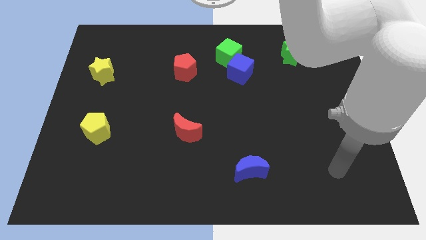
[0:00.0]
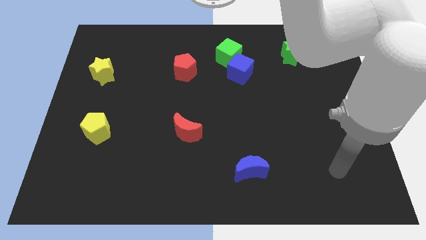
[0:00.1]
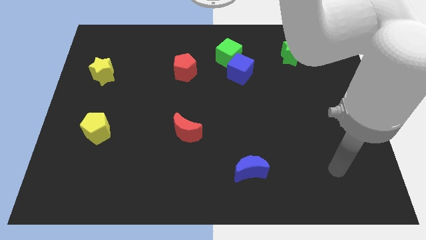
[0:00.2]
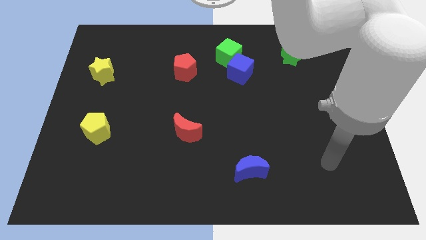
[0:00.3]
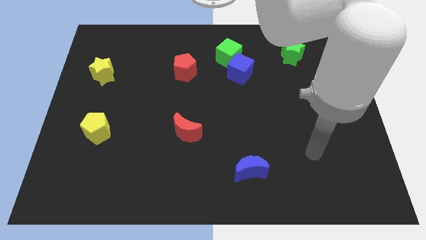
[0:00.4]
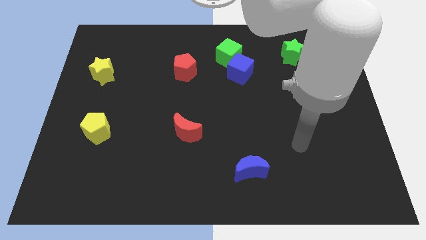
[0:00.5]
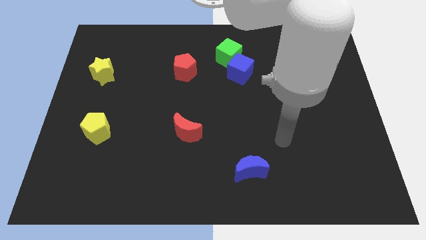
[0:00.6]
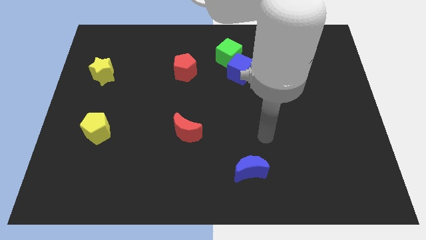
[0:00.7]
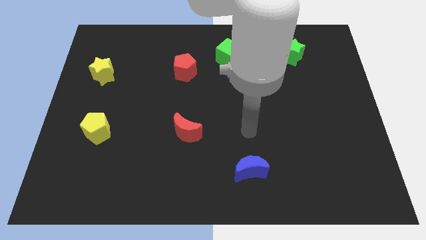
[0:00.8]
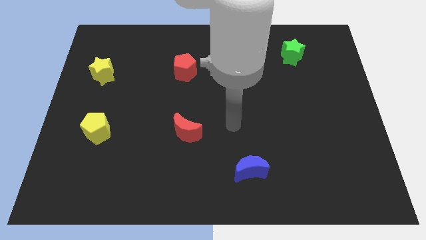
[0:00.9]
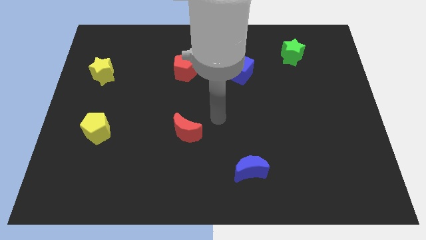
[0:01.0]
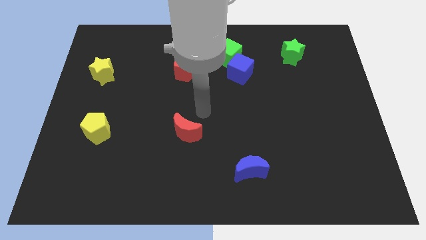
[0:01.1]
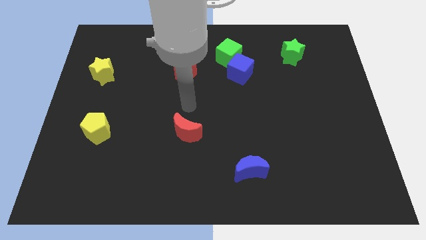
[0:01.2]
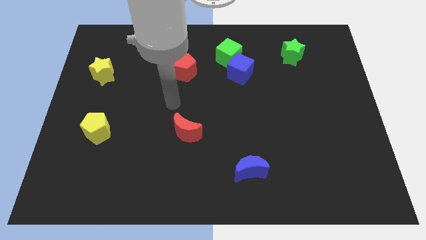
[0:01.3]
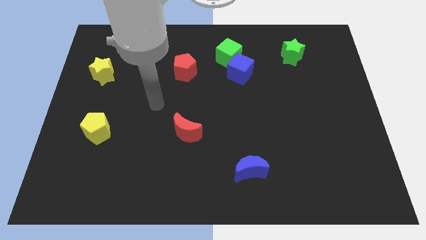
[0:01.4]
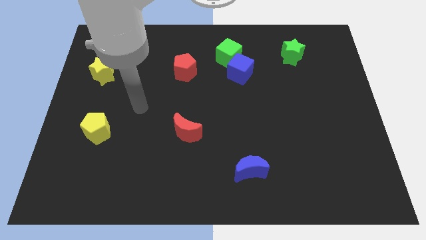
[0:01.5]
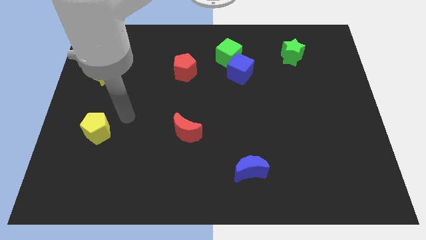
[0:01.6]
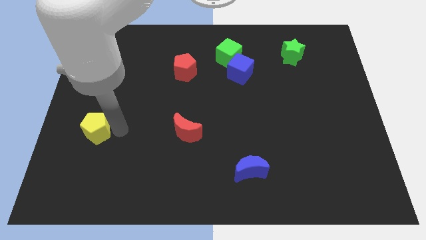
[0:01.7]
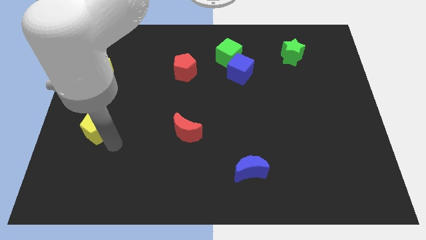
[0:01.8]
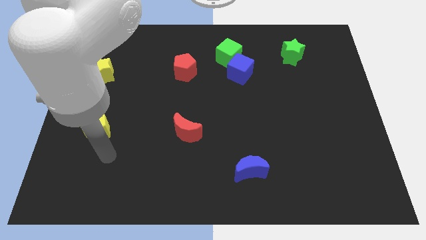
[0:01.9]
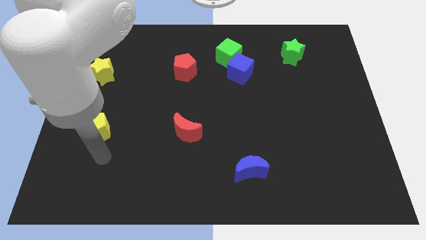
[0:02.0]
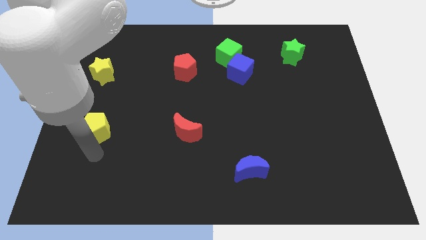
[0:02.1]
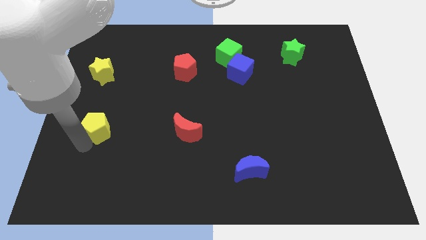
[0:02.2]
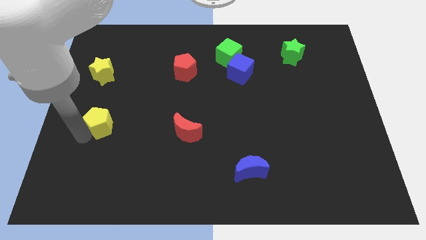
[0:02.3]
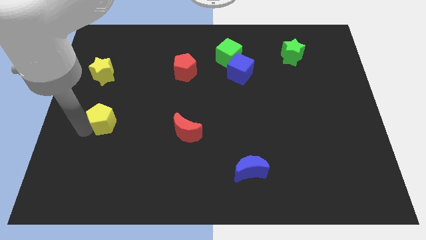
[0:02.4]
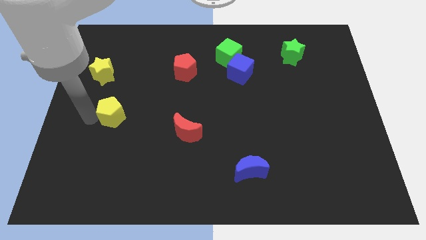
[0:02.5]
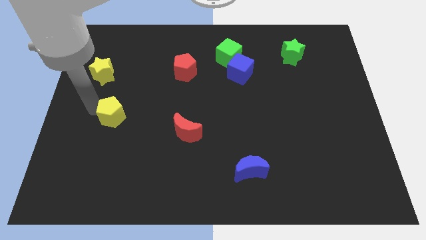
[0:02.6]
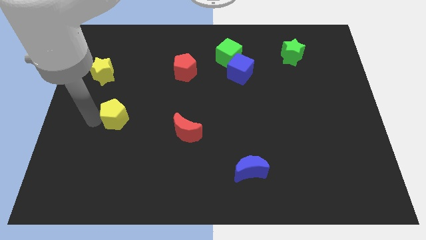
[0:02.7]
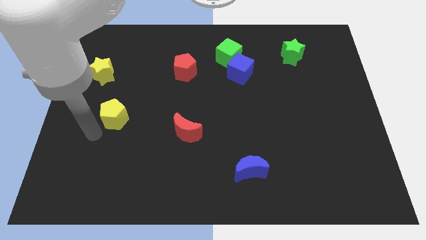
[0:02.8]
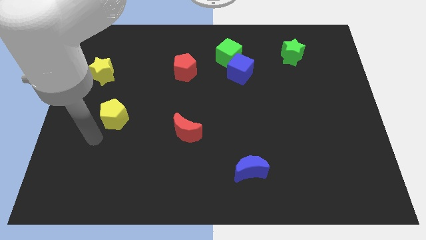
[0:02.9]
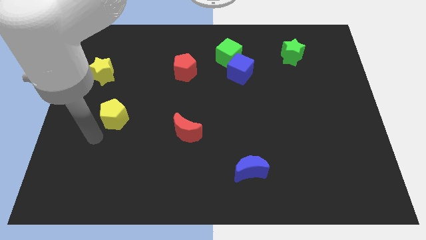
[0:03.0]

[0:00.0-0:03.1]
put the yellow pentagon diagonally below the bottom right side of the yellow star

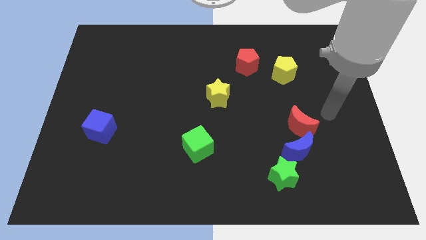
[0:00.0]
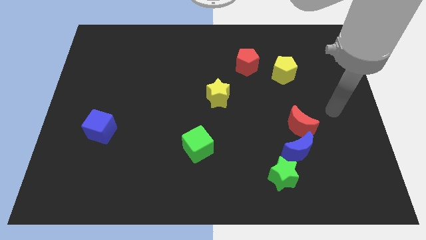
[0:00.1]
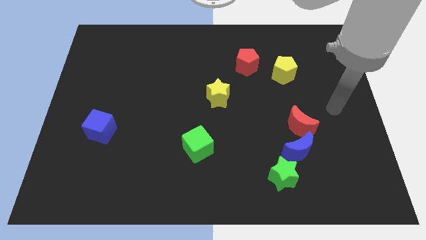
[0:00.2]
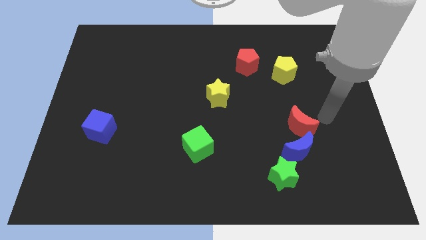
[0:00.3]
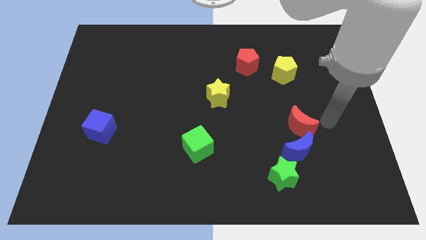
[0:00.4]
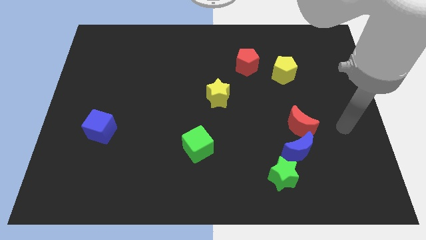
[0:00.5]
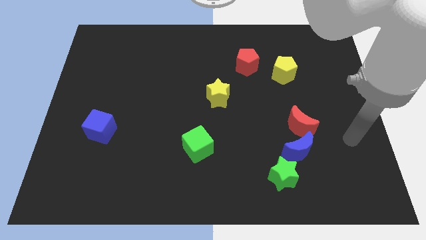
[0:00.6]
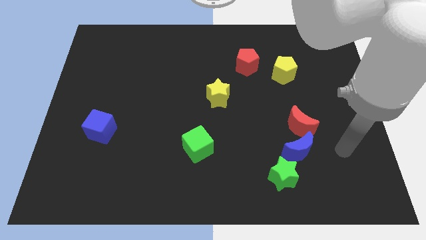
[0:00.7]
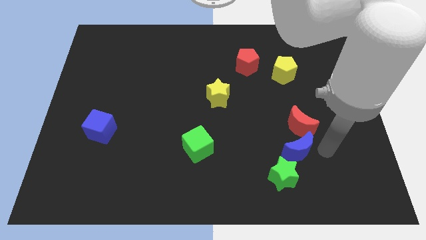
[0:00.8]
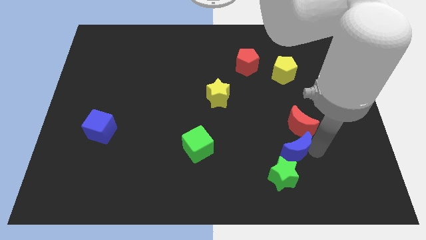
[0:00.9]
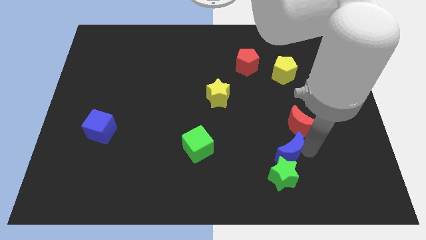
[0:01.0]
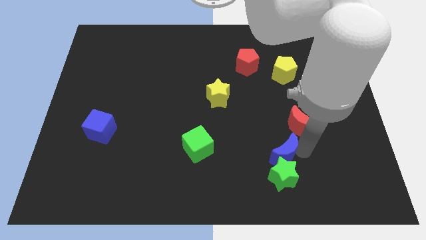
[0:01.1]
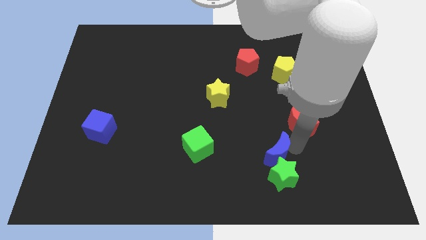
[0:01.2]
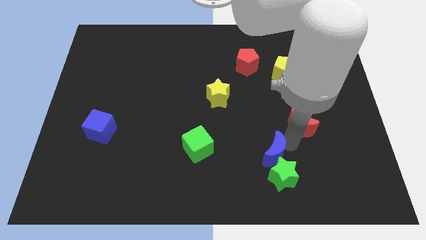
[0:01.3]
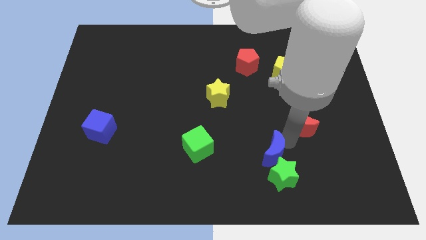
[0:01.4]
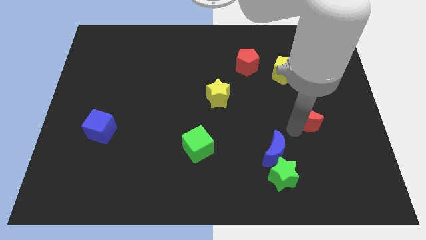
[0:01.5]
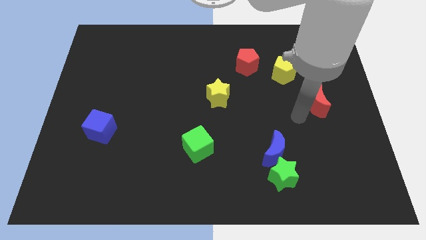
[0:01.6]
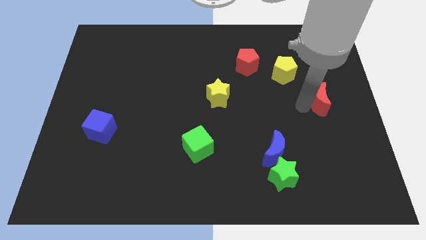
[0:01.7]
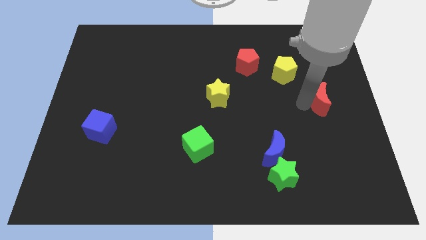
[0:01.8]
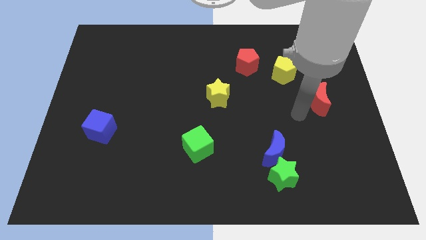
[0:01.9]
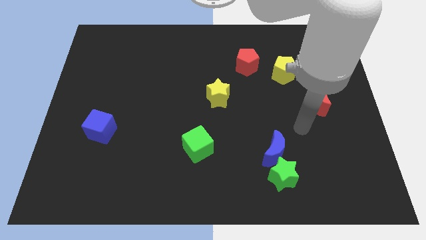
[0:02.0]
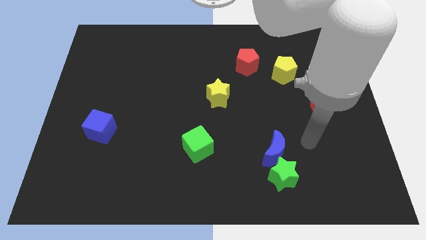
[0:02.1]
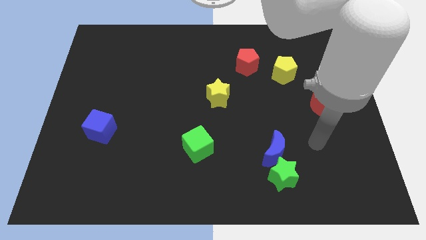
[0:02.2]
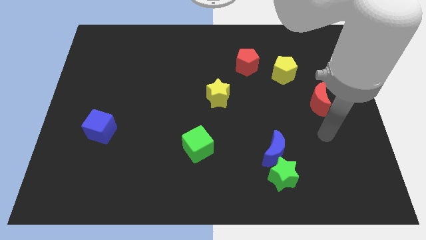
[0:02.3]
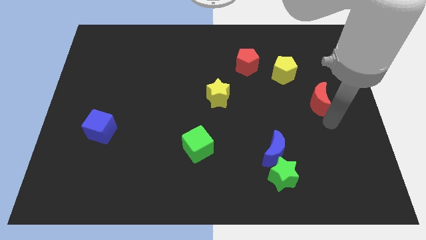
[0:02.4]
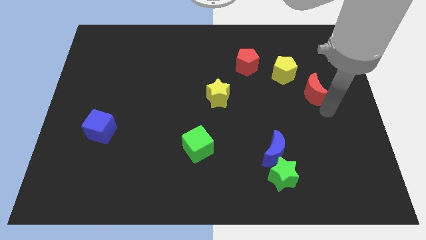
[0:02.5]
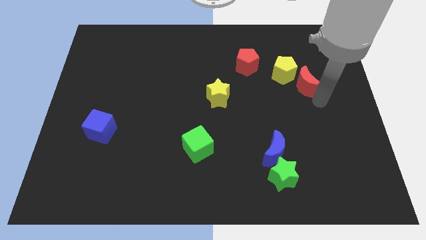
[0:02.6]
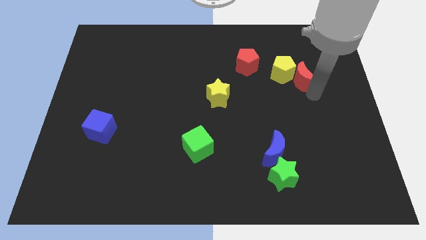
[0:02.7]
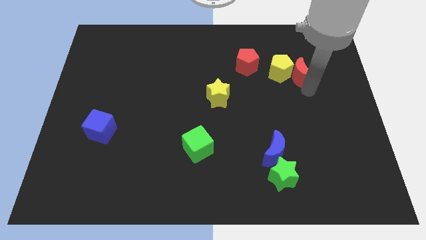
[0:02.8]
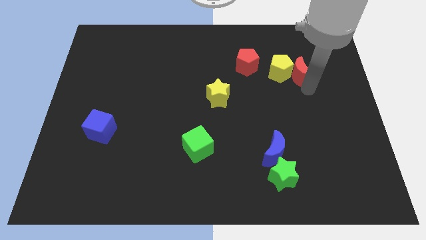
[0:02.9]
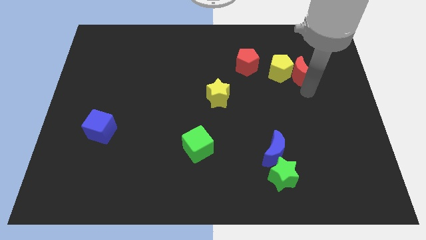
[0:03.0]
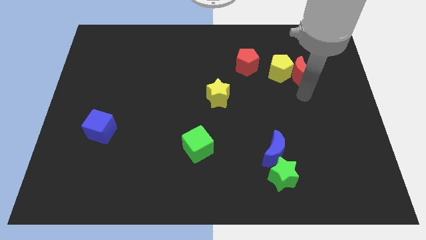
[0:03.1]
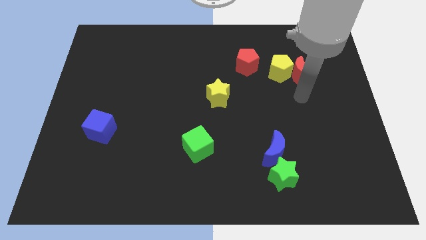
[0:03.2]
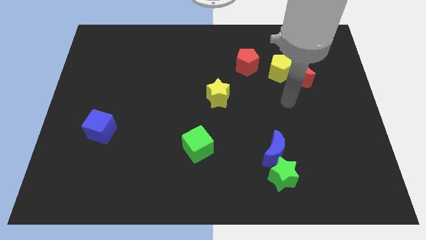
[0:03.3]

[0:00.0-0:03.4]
separate red moon and blue moon

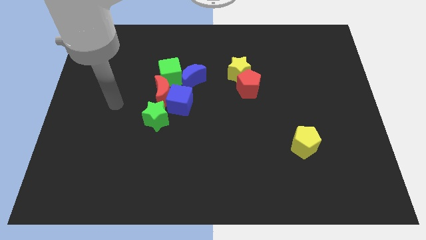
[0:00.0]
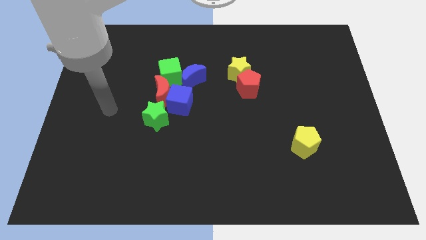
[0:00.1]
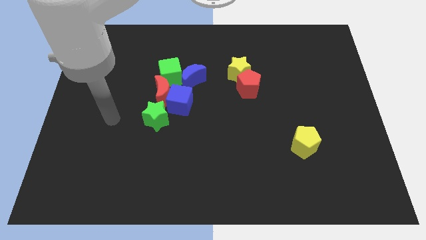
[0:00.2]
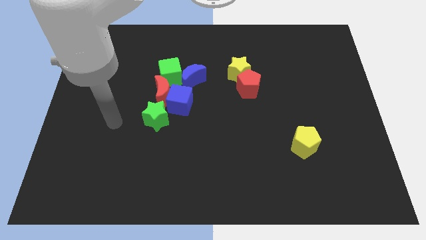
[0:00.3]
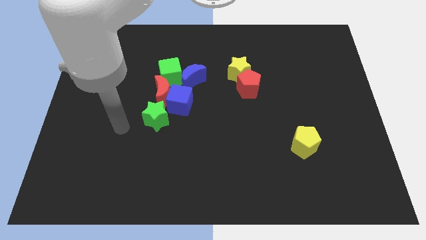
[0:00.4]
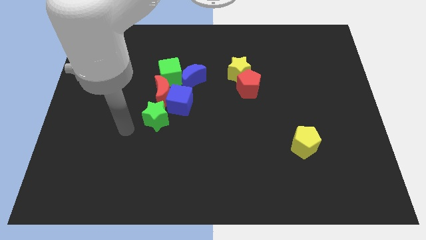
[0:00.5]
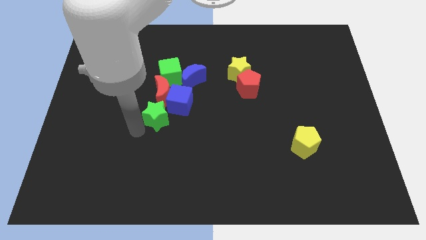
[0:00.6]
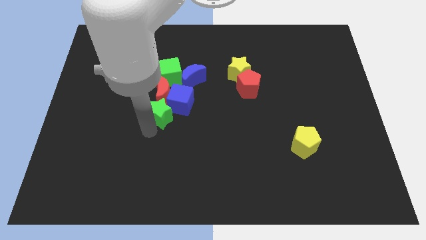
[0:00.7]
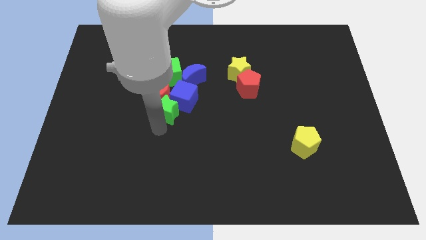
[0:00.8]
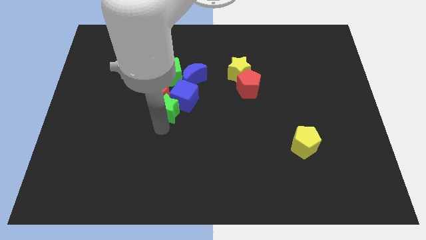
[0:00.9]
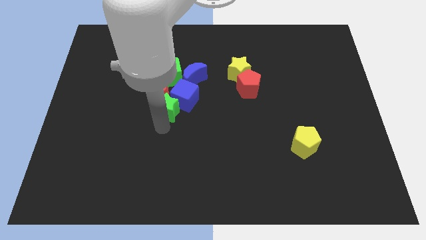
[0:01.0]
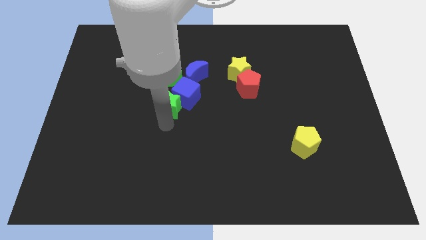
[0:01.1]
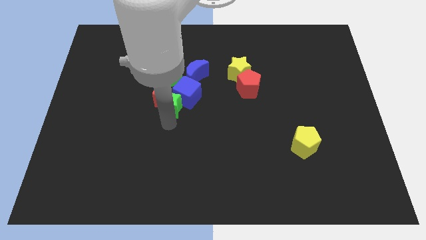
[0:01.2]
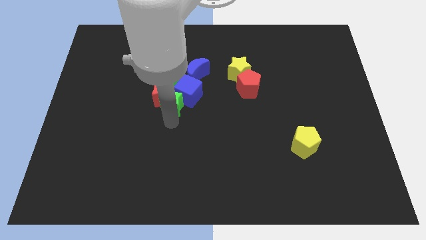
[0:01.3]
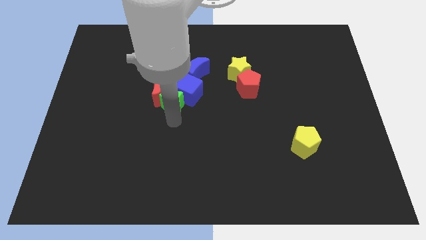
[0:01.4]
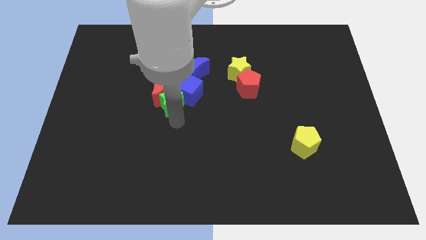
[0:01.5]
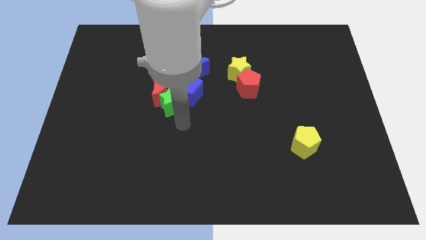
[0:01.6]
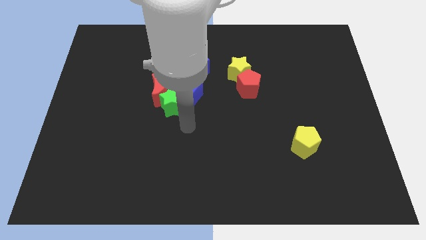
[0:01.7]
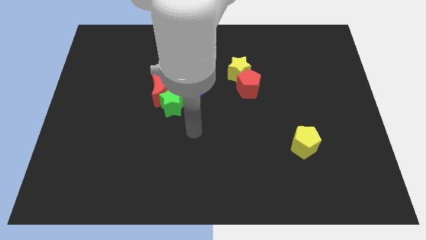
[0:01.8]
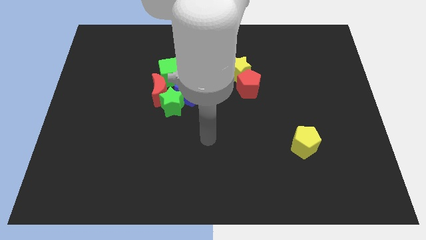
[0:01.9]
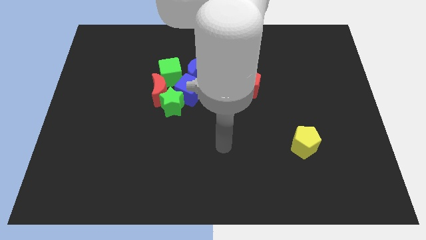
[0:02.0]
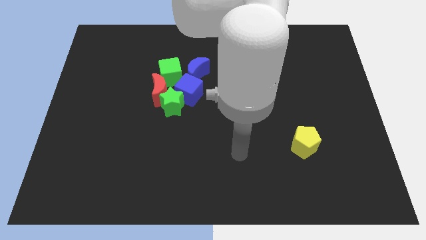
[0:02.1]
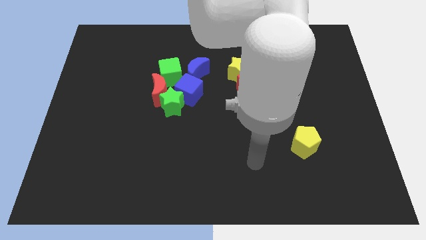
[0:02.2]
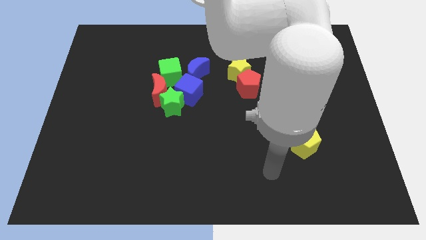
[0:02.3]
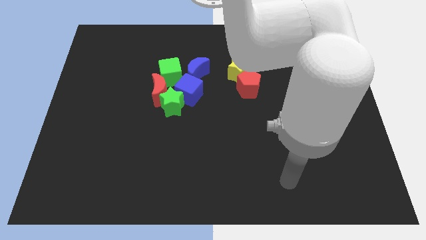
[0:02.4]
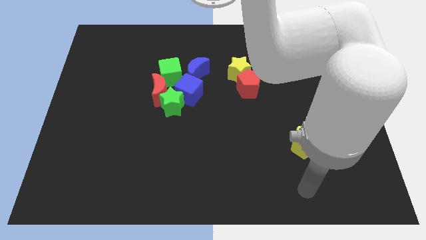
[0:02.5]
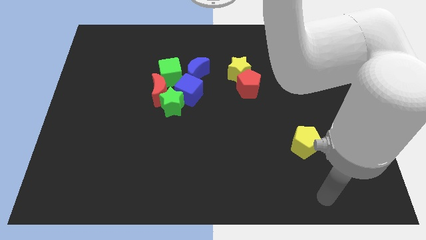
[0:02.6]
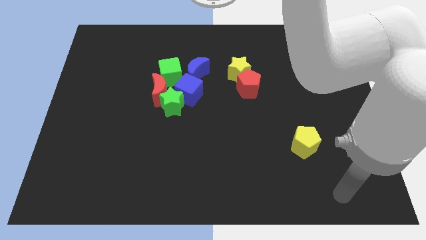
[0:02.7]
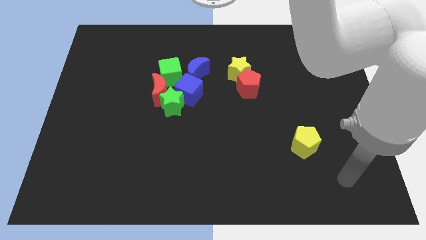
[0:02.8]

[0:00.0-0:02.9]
slightly move the green star to the upside of the board
